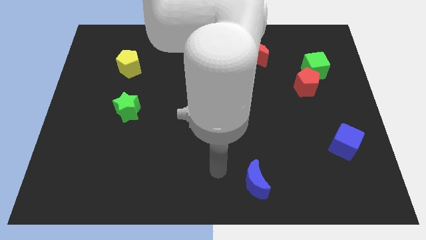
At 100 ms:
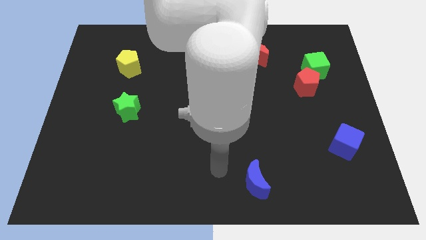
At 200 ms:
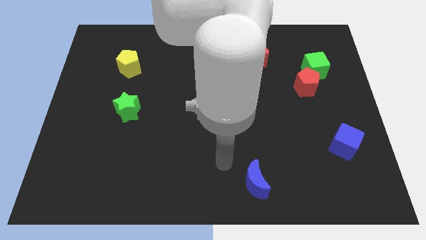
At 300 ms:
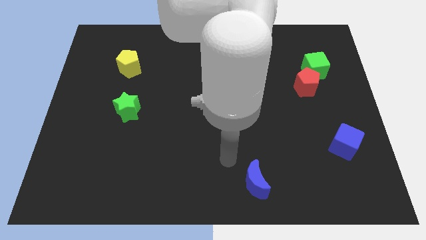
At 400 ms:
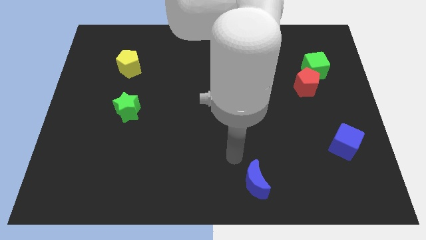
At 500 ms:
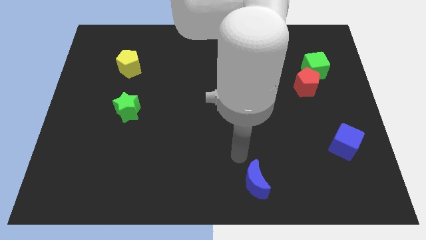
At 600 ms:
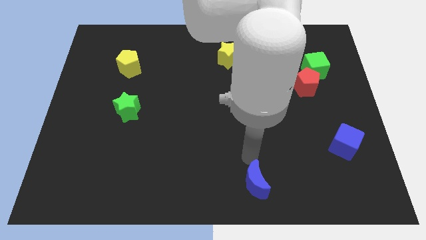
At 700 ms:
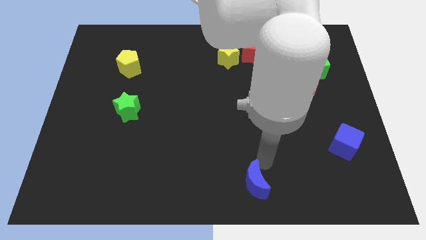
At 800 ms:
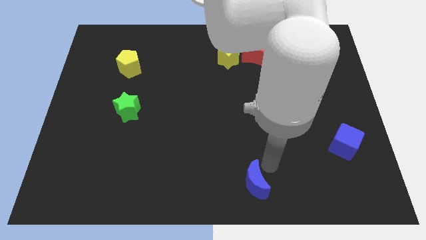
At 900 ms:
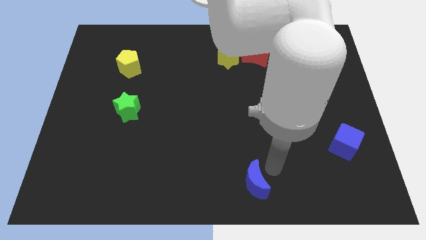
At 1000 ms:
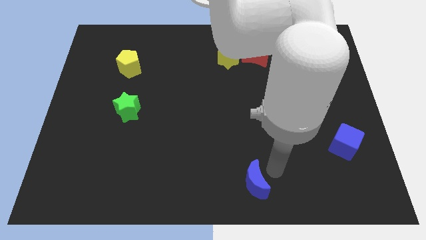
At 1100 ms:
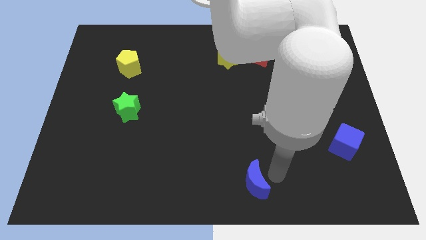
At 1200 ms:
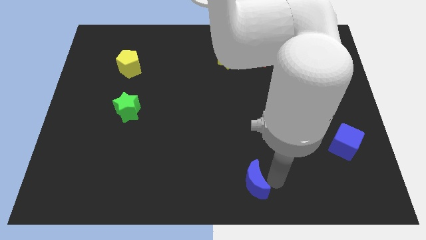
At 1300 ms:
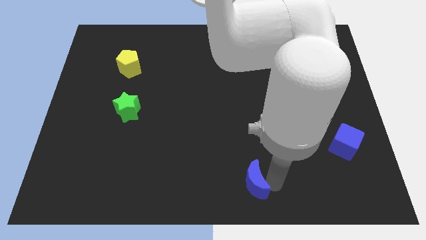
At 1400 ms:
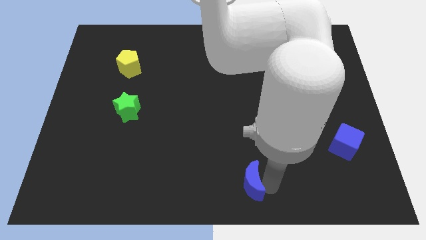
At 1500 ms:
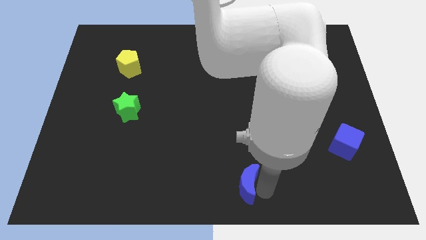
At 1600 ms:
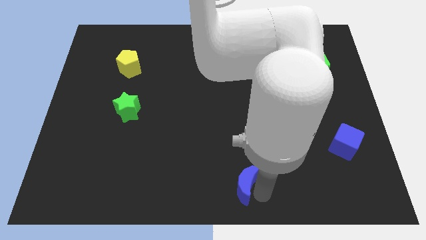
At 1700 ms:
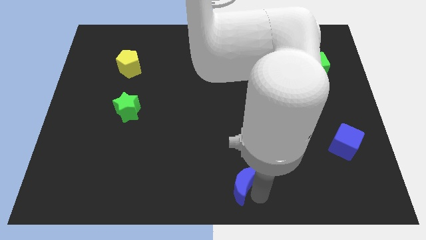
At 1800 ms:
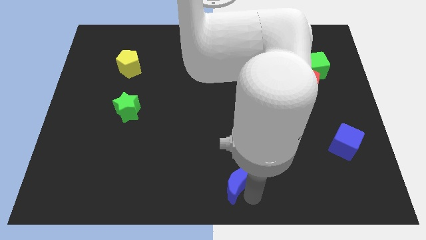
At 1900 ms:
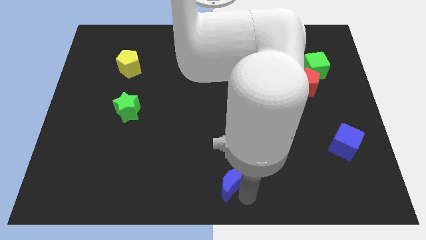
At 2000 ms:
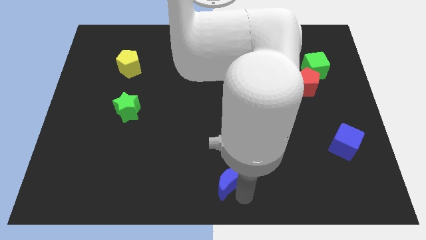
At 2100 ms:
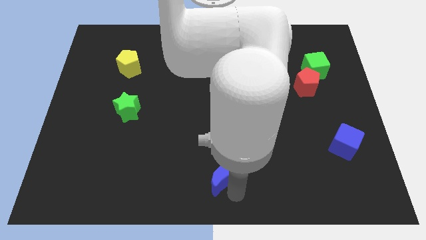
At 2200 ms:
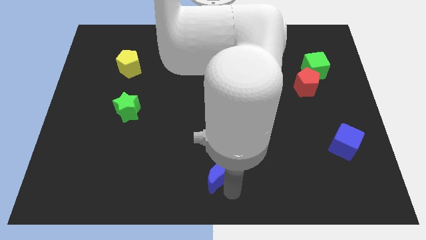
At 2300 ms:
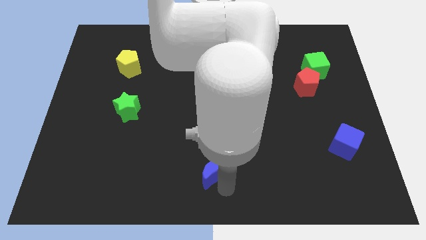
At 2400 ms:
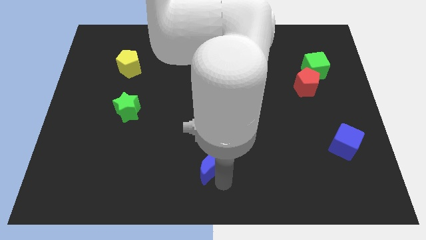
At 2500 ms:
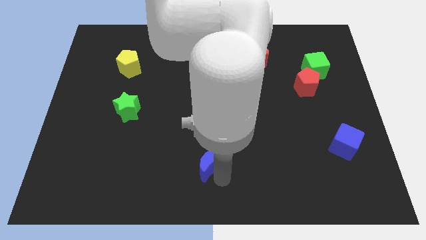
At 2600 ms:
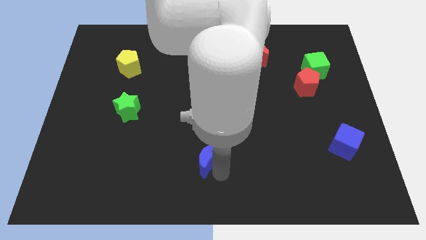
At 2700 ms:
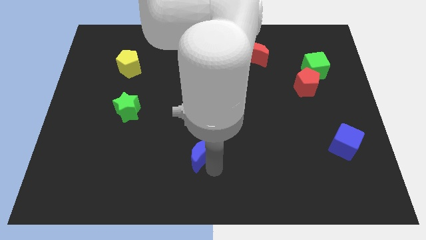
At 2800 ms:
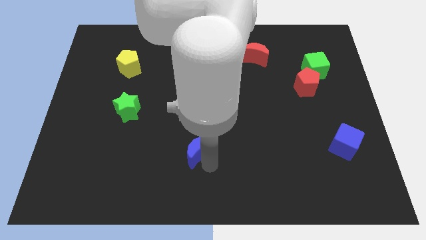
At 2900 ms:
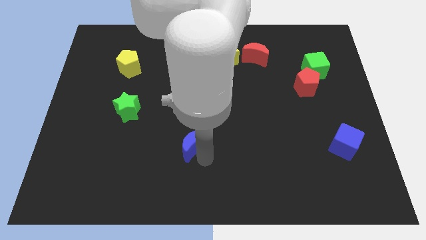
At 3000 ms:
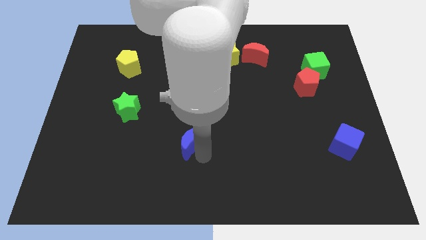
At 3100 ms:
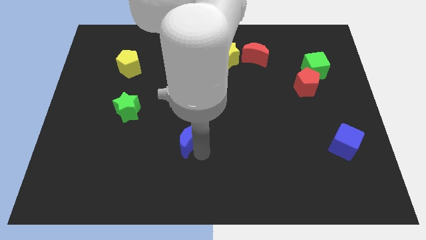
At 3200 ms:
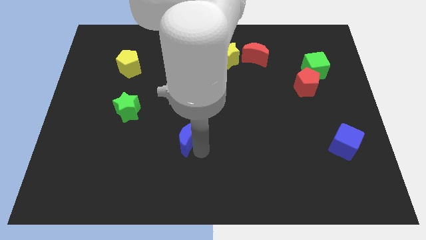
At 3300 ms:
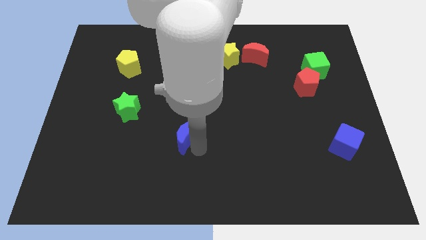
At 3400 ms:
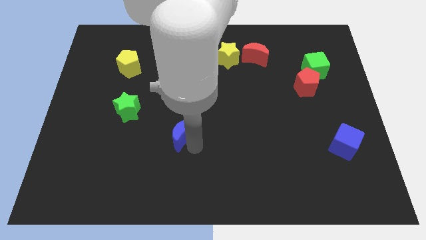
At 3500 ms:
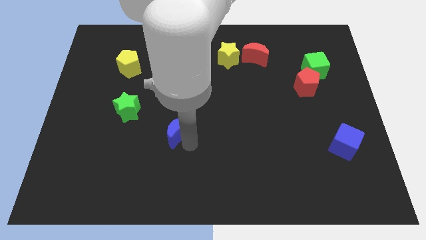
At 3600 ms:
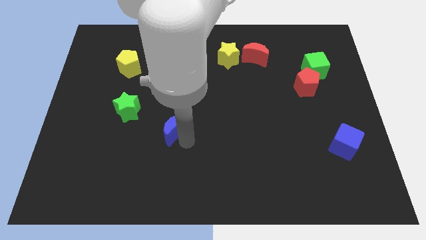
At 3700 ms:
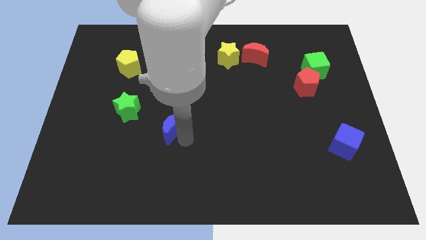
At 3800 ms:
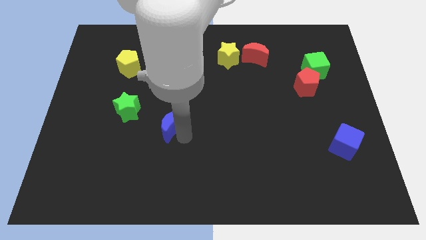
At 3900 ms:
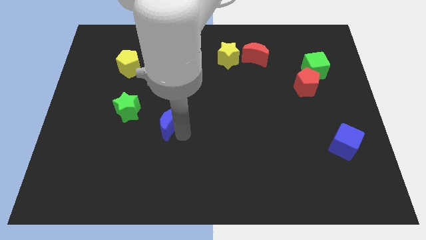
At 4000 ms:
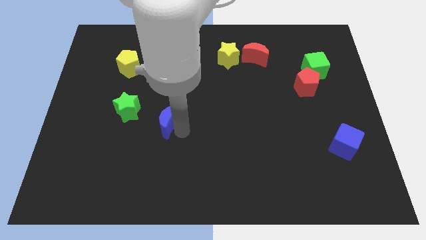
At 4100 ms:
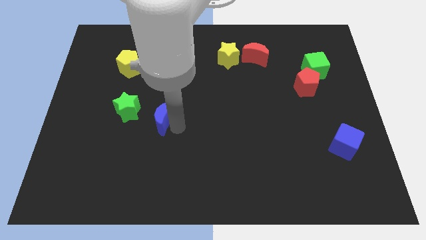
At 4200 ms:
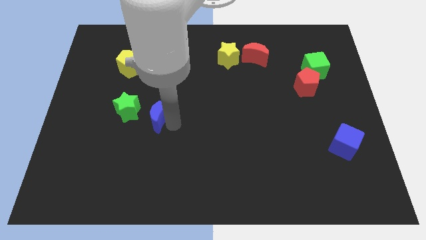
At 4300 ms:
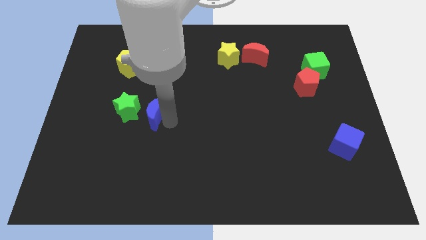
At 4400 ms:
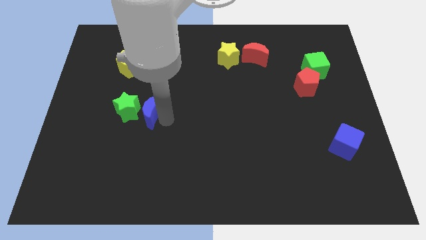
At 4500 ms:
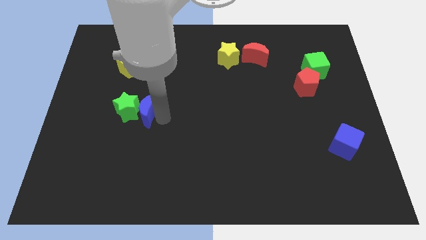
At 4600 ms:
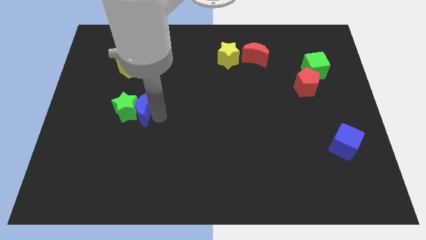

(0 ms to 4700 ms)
push the blue moon next to the green star

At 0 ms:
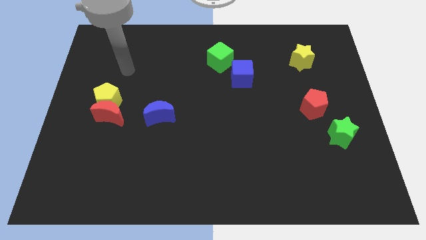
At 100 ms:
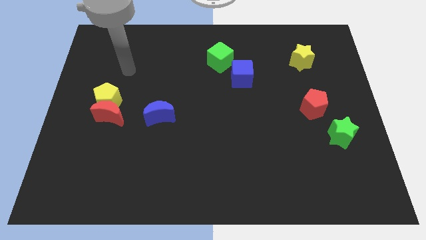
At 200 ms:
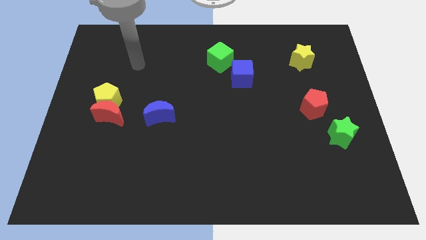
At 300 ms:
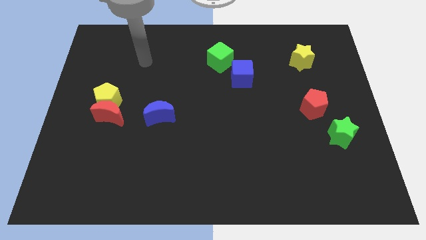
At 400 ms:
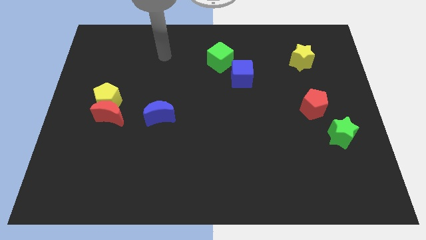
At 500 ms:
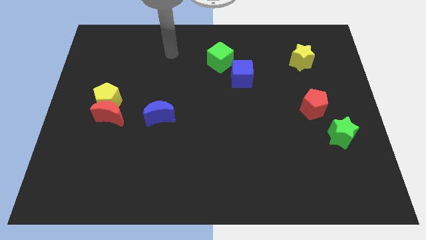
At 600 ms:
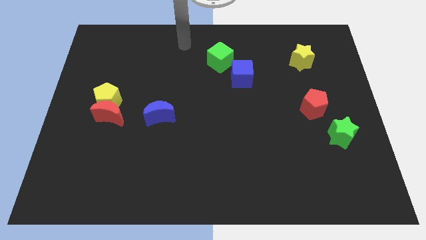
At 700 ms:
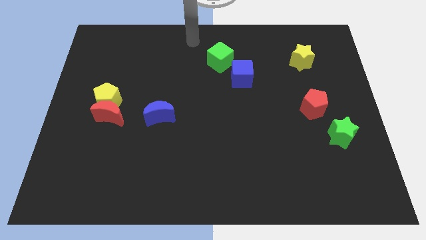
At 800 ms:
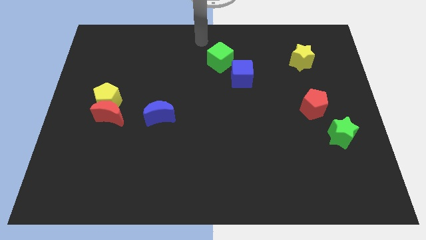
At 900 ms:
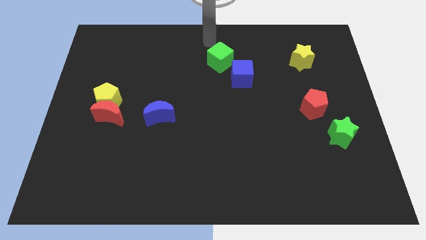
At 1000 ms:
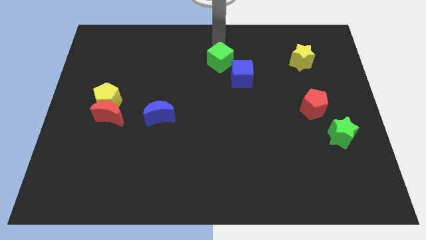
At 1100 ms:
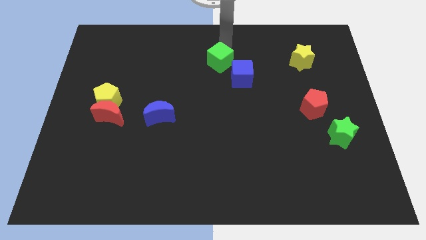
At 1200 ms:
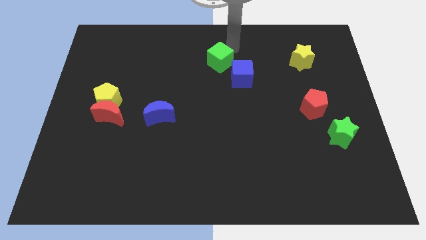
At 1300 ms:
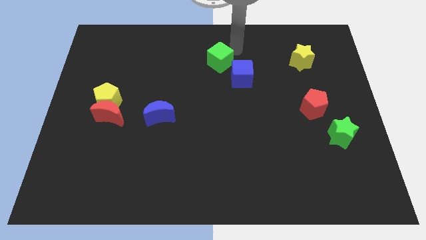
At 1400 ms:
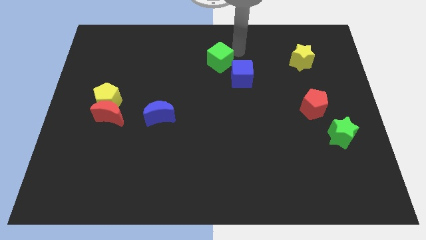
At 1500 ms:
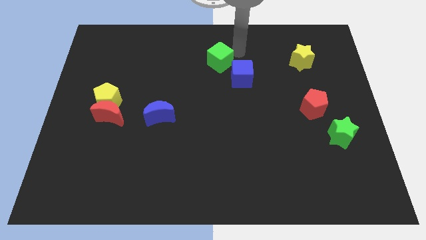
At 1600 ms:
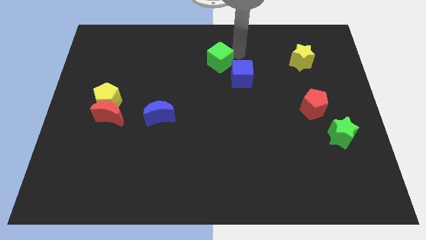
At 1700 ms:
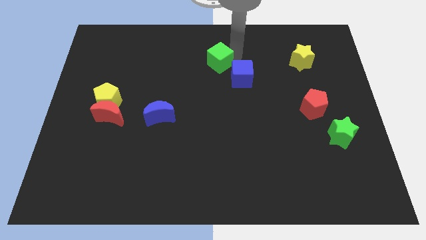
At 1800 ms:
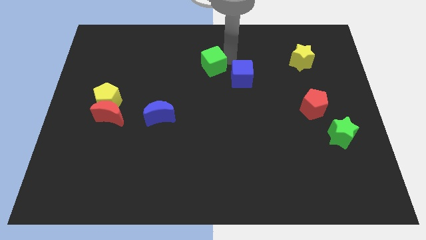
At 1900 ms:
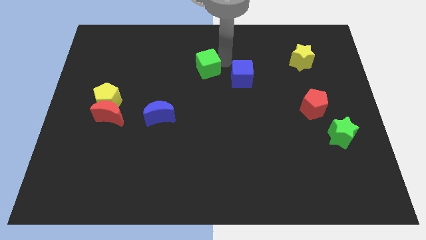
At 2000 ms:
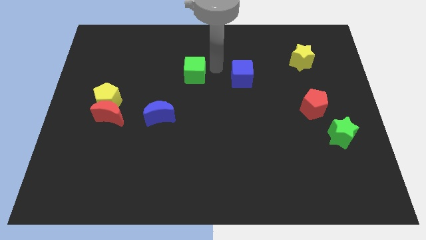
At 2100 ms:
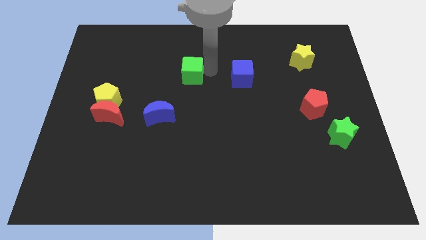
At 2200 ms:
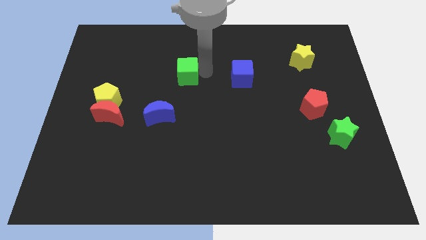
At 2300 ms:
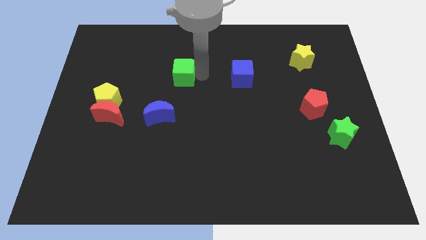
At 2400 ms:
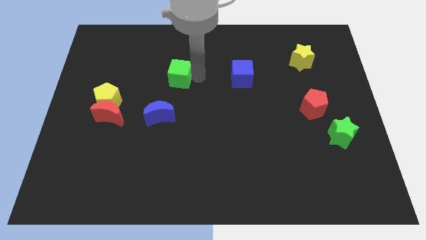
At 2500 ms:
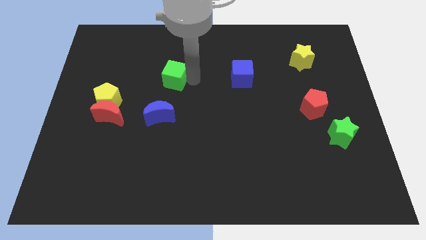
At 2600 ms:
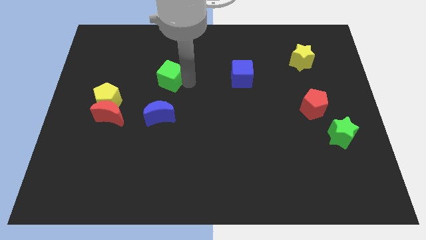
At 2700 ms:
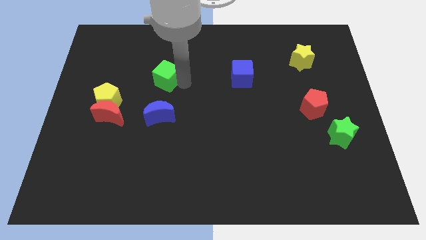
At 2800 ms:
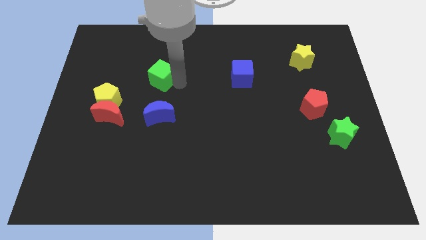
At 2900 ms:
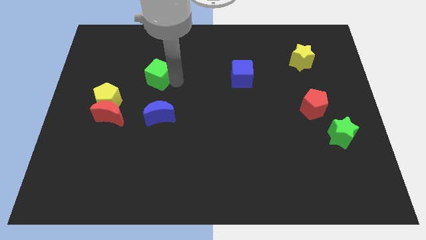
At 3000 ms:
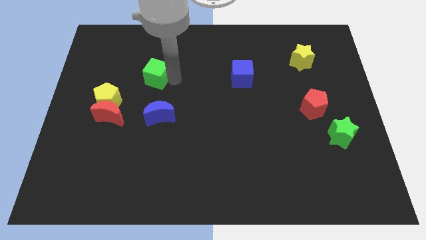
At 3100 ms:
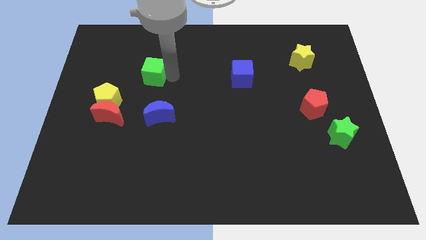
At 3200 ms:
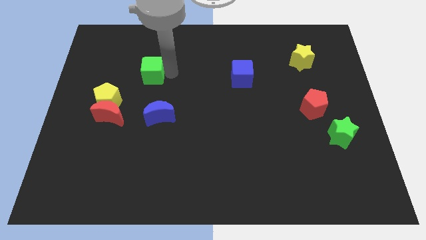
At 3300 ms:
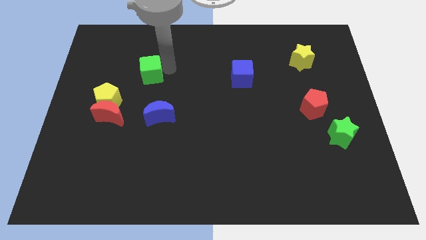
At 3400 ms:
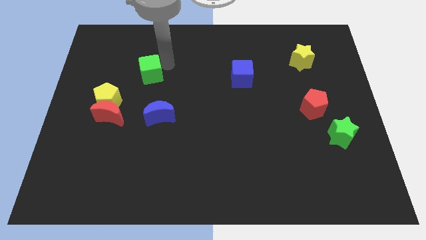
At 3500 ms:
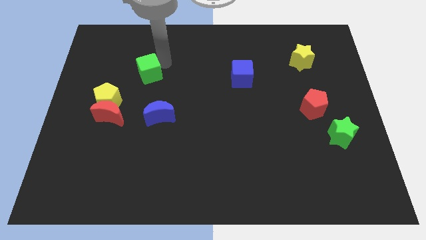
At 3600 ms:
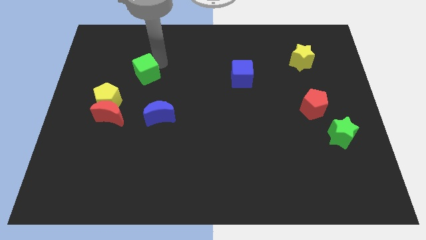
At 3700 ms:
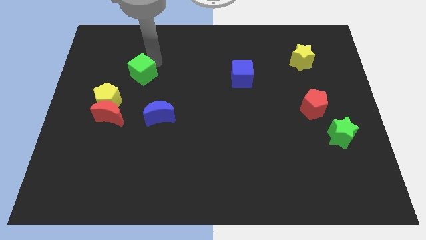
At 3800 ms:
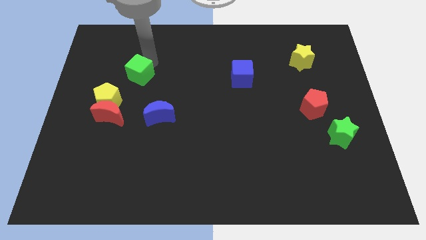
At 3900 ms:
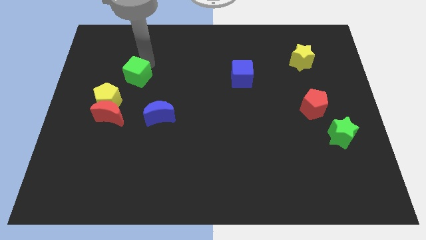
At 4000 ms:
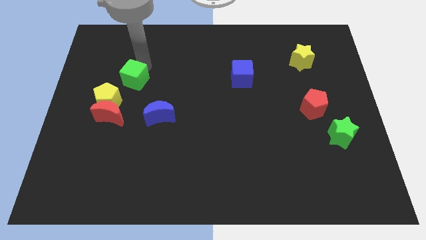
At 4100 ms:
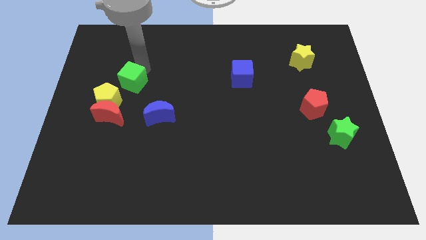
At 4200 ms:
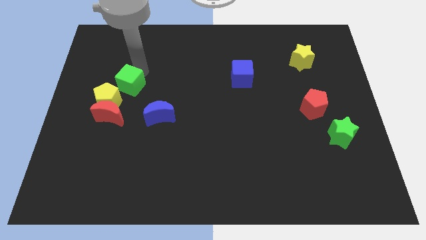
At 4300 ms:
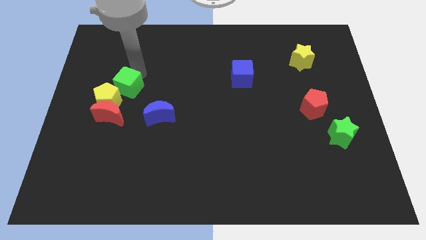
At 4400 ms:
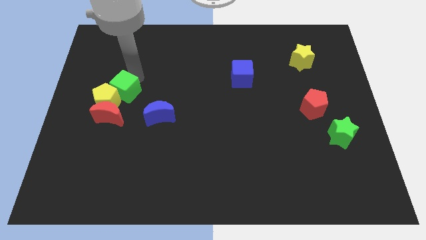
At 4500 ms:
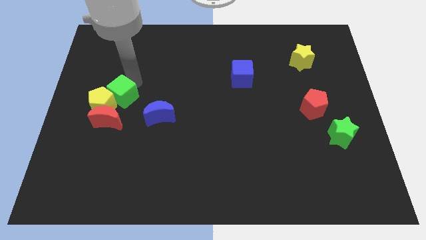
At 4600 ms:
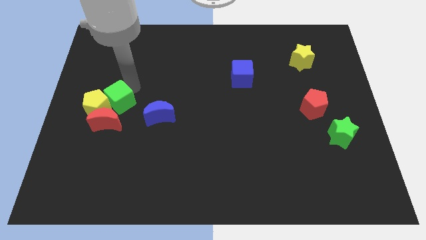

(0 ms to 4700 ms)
move the green cube towards the yellow pentagon
